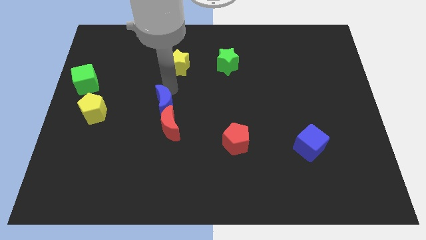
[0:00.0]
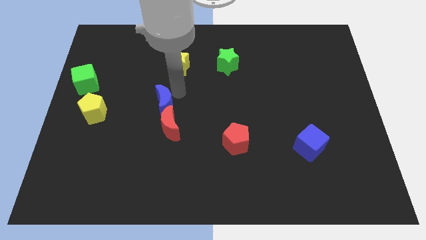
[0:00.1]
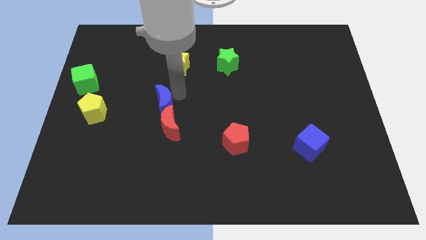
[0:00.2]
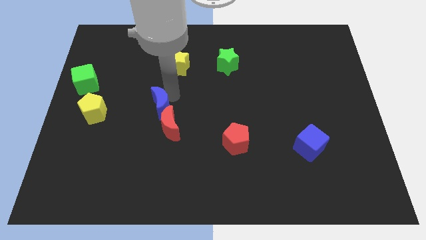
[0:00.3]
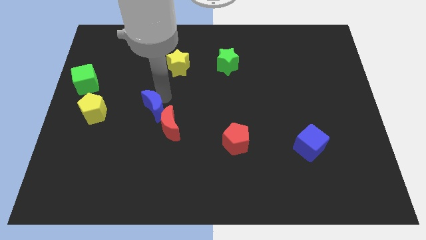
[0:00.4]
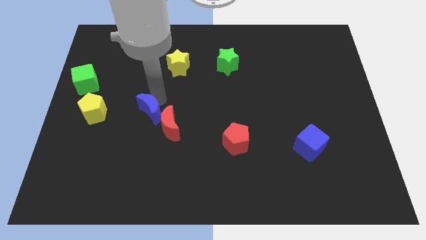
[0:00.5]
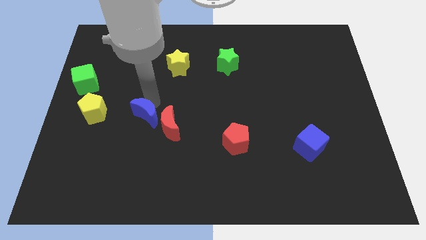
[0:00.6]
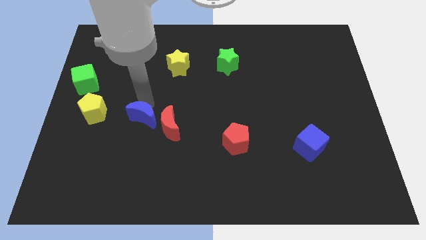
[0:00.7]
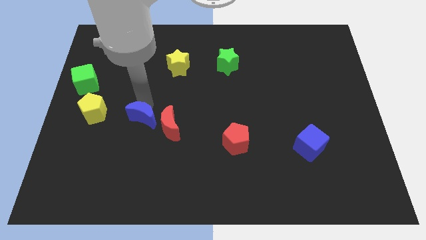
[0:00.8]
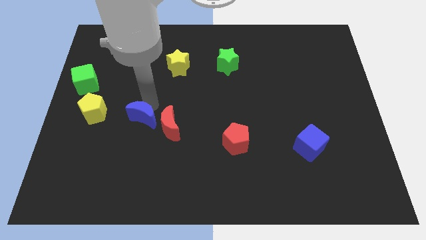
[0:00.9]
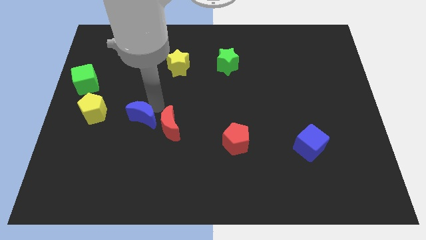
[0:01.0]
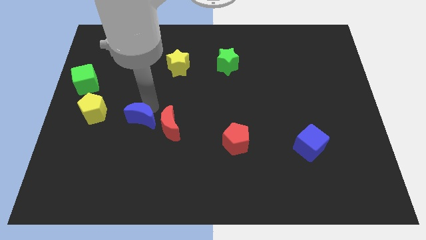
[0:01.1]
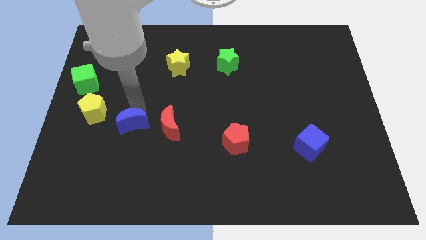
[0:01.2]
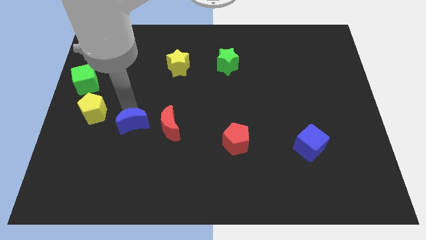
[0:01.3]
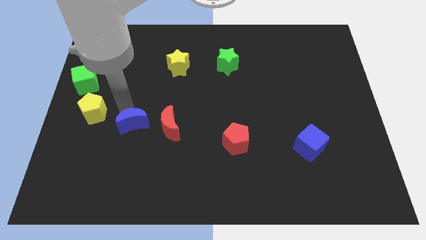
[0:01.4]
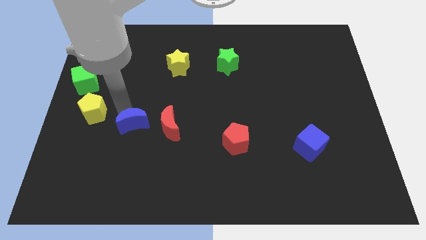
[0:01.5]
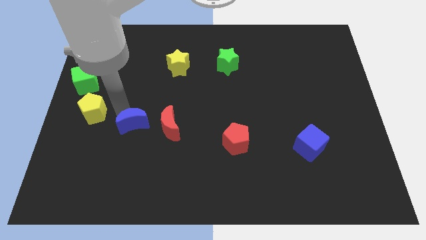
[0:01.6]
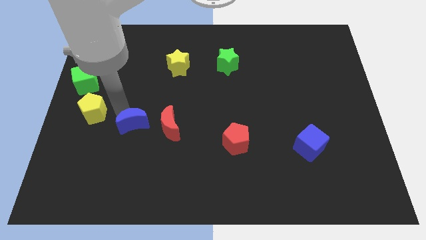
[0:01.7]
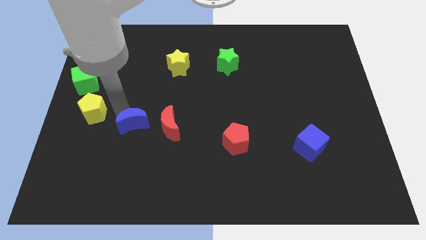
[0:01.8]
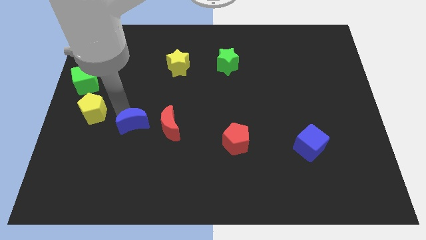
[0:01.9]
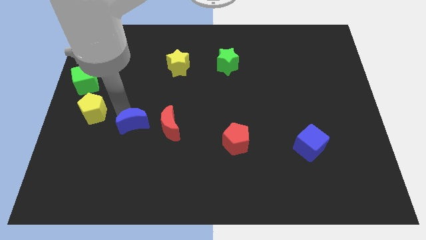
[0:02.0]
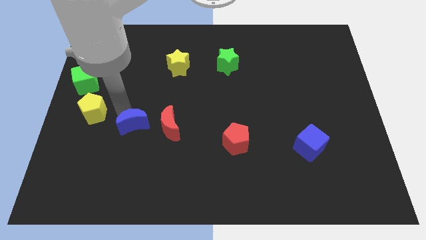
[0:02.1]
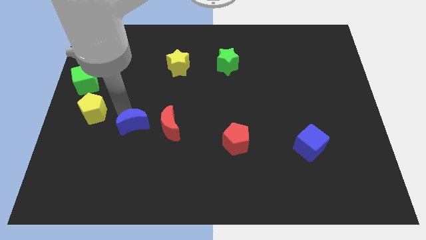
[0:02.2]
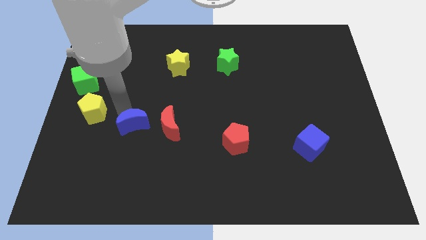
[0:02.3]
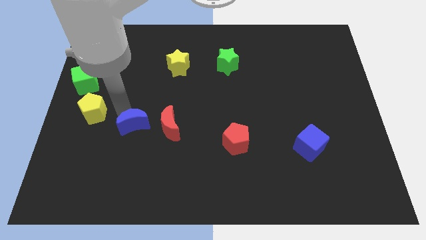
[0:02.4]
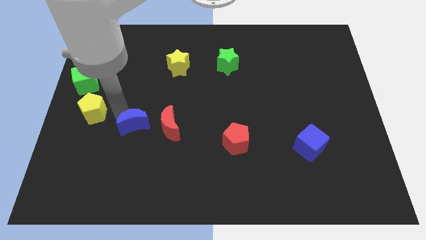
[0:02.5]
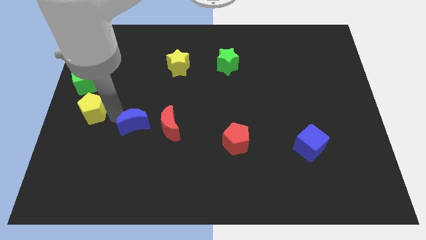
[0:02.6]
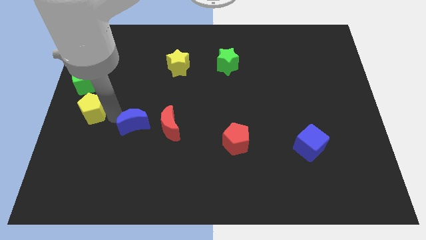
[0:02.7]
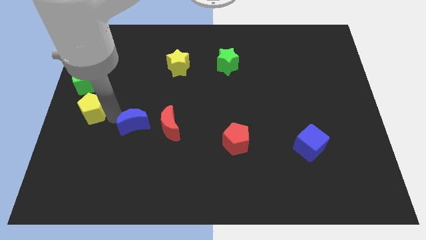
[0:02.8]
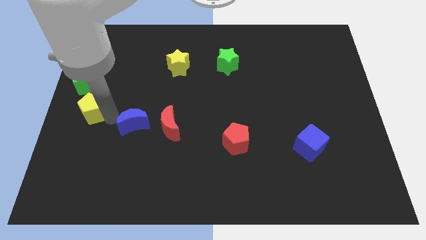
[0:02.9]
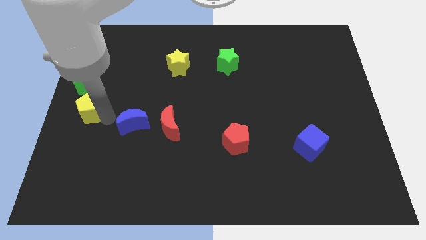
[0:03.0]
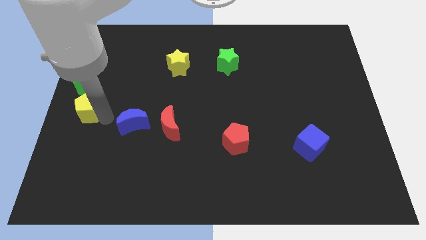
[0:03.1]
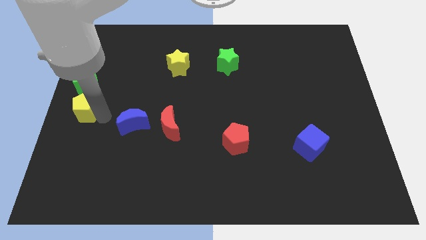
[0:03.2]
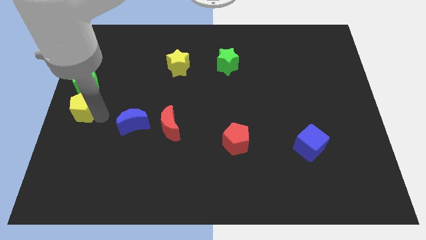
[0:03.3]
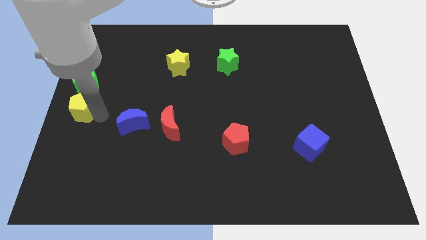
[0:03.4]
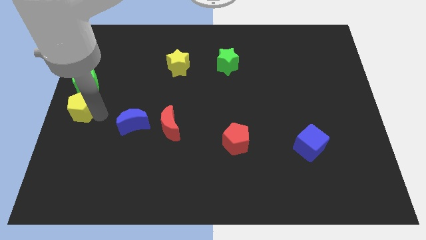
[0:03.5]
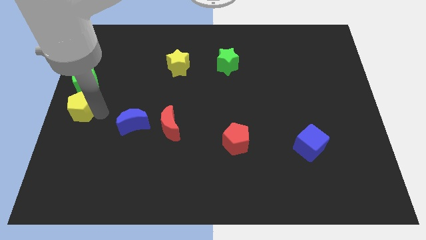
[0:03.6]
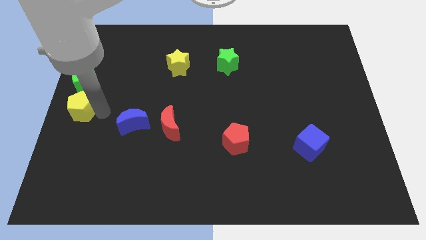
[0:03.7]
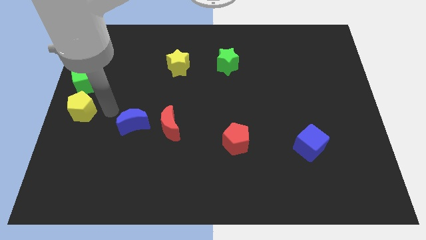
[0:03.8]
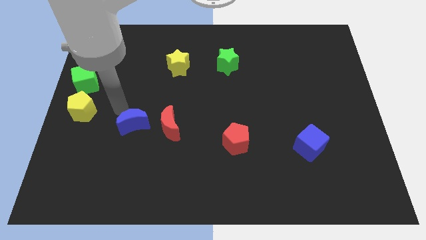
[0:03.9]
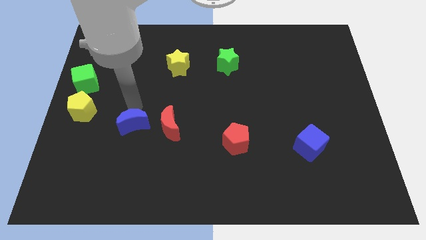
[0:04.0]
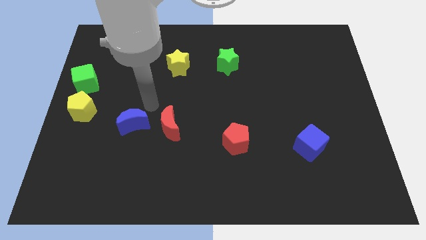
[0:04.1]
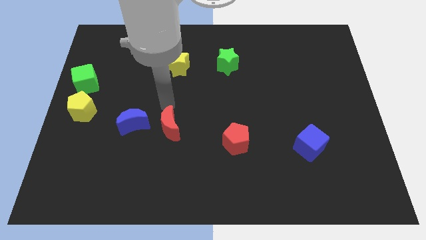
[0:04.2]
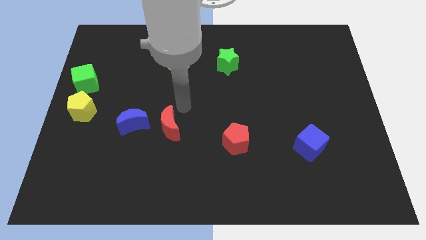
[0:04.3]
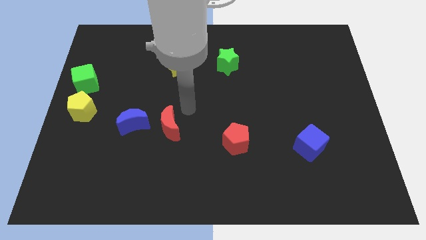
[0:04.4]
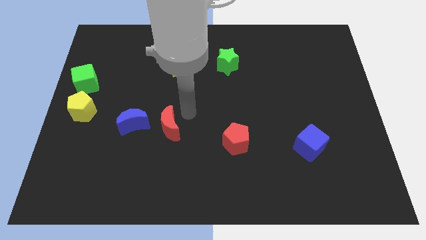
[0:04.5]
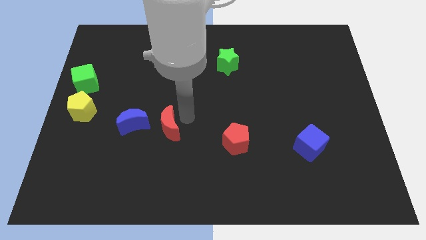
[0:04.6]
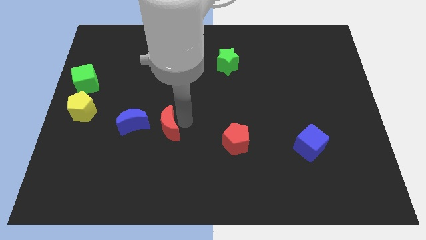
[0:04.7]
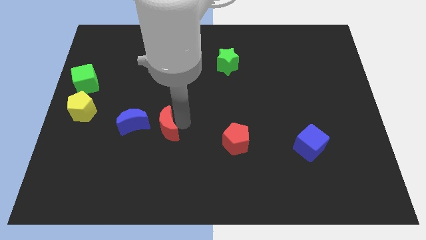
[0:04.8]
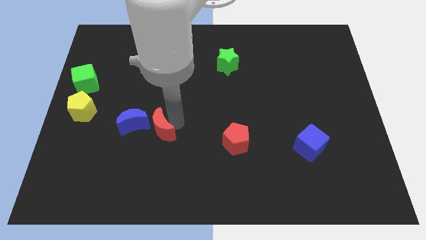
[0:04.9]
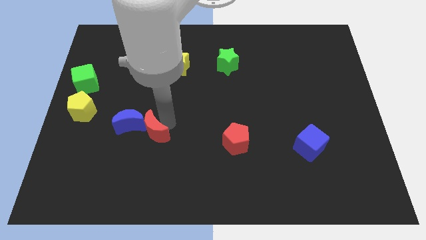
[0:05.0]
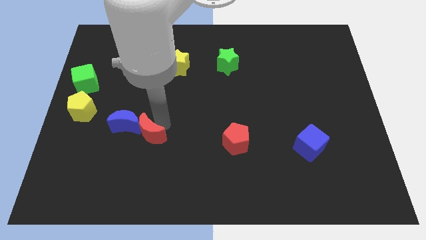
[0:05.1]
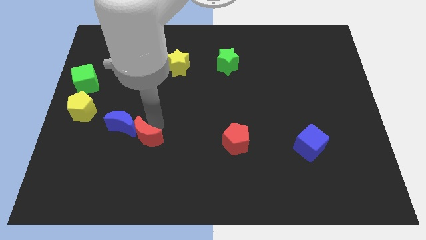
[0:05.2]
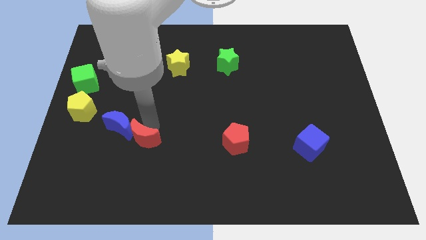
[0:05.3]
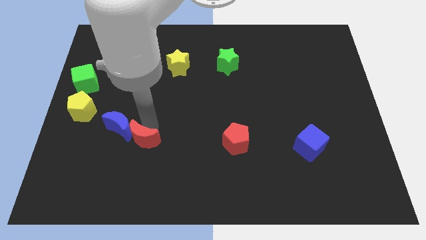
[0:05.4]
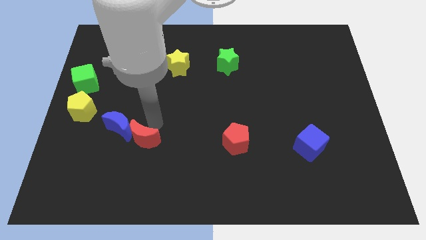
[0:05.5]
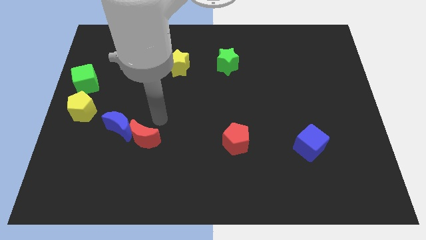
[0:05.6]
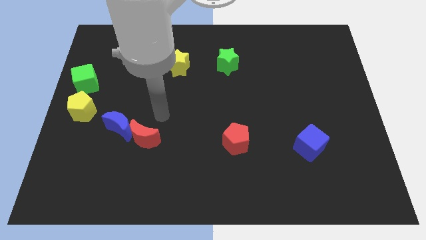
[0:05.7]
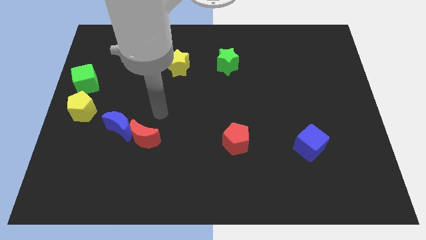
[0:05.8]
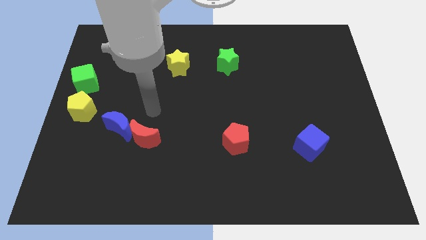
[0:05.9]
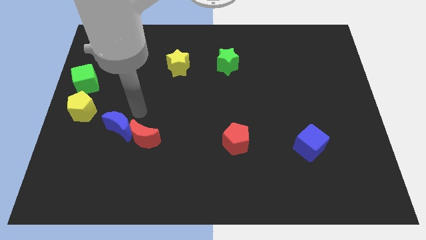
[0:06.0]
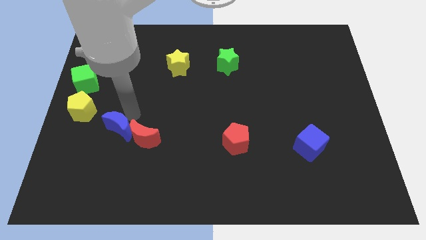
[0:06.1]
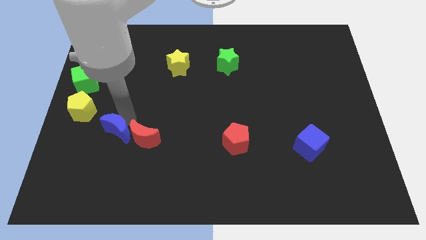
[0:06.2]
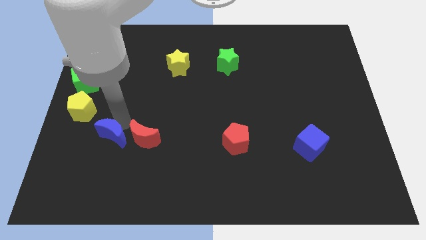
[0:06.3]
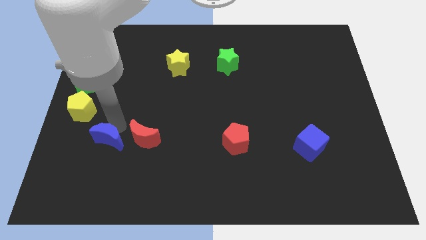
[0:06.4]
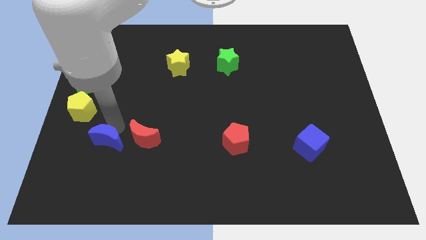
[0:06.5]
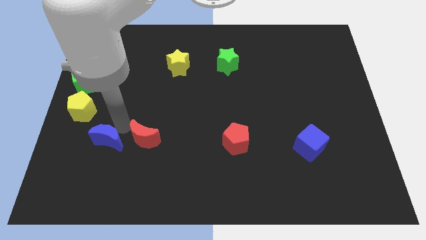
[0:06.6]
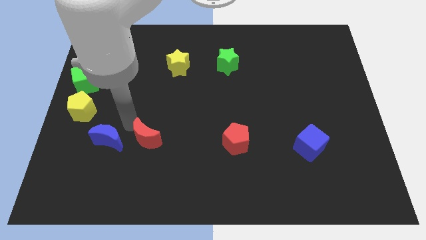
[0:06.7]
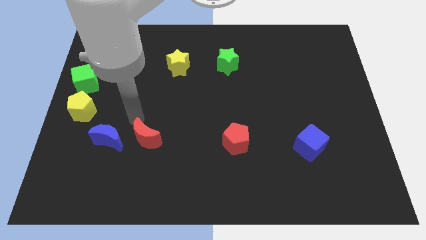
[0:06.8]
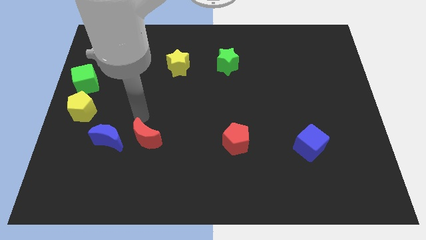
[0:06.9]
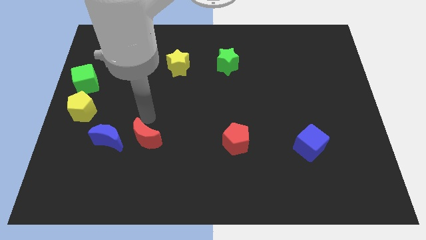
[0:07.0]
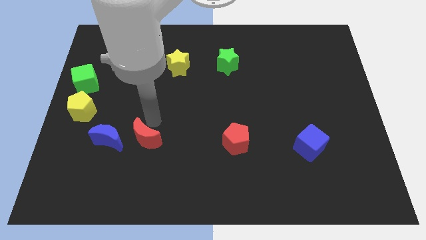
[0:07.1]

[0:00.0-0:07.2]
slide the yellow pentagon vertically to the bottom of the green cube

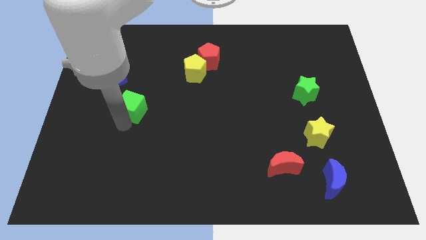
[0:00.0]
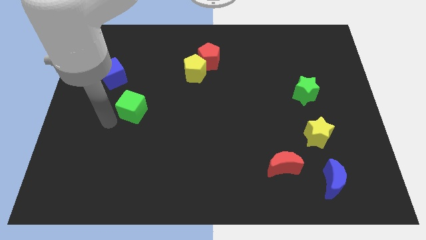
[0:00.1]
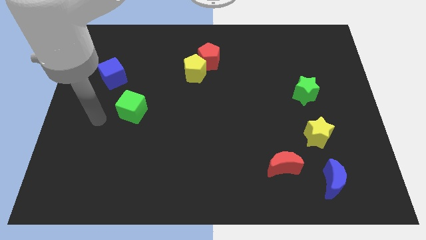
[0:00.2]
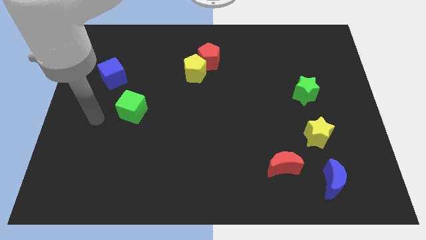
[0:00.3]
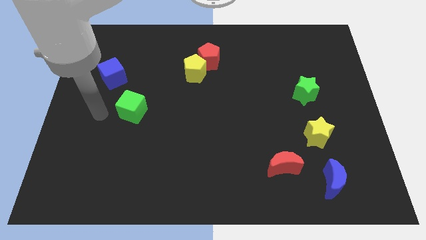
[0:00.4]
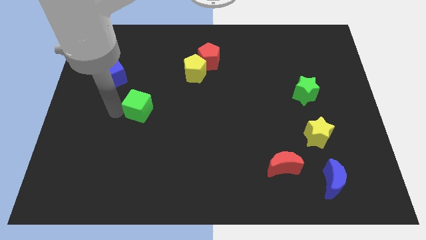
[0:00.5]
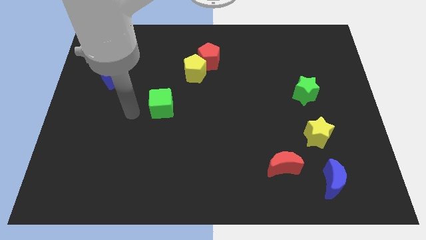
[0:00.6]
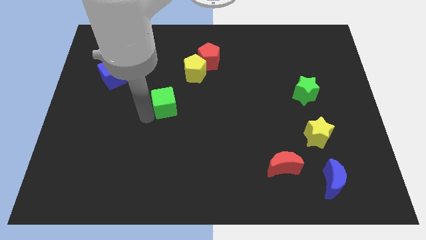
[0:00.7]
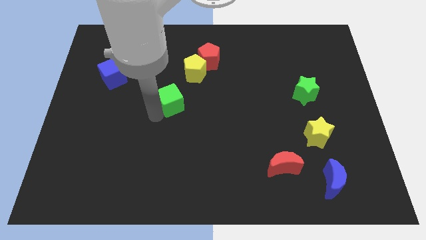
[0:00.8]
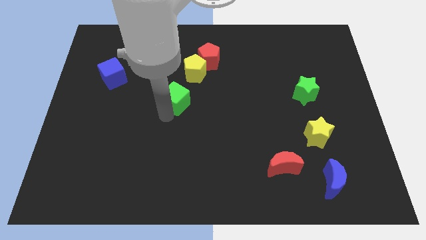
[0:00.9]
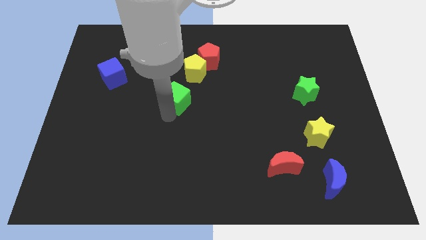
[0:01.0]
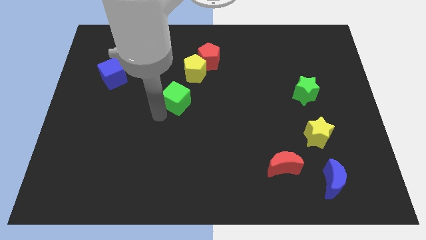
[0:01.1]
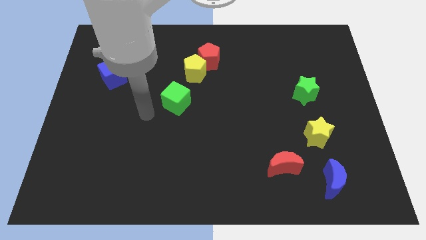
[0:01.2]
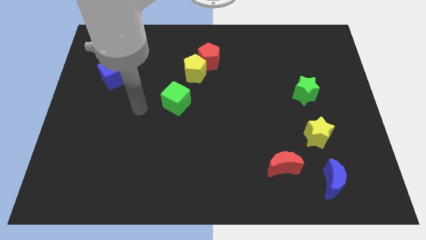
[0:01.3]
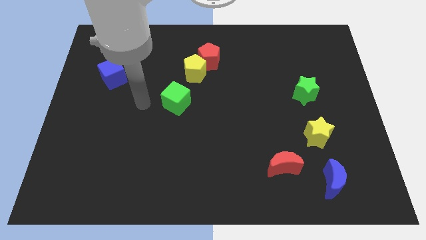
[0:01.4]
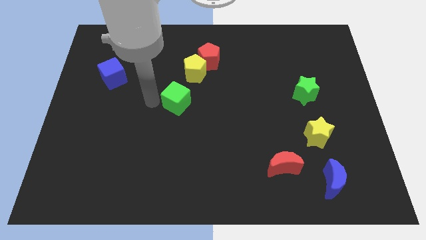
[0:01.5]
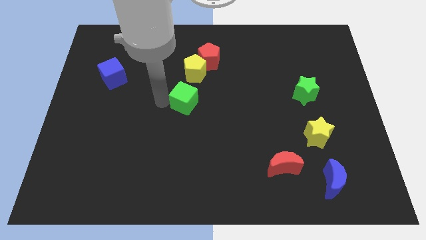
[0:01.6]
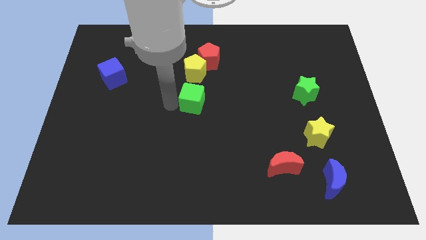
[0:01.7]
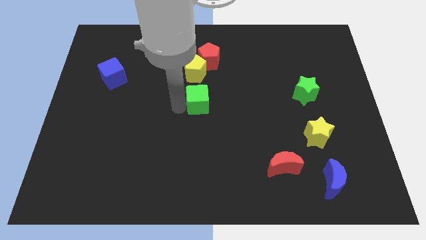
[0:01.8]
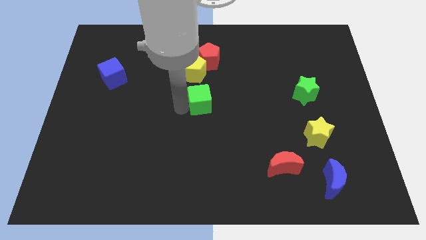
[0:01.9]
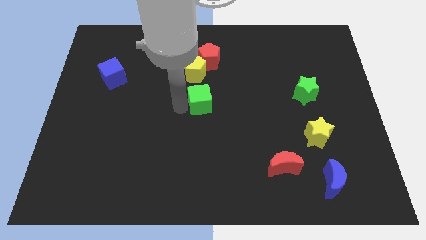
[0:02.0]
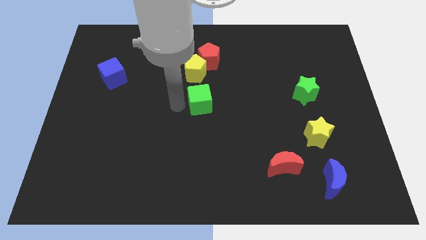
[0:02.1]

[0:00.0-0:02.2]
move the green cube to the bottom of the yellow pentagon
